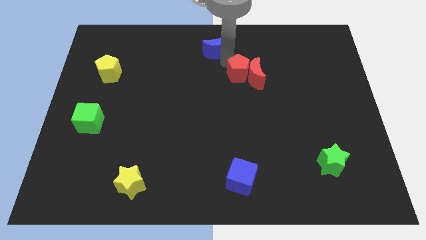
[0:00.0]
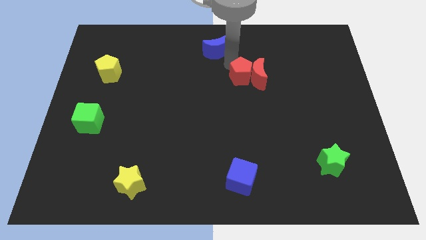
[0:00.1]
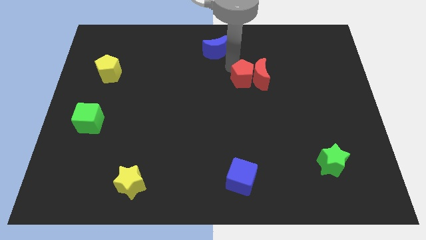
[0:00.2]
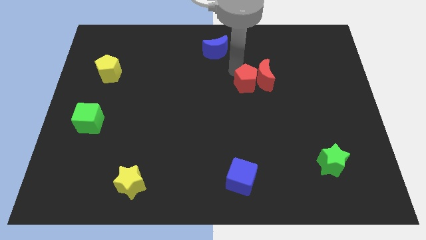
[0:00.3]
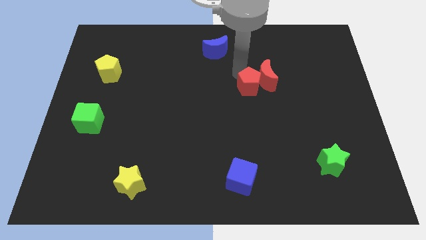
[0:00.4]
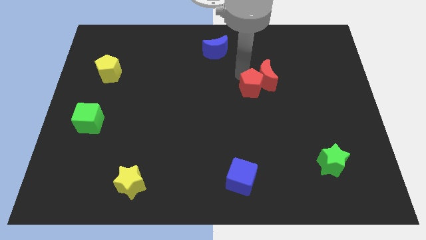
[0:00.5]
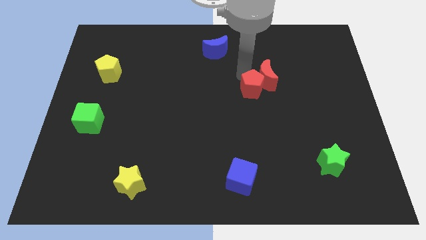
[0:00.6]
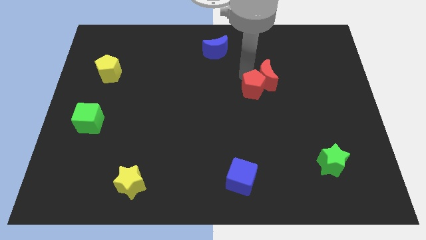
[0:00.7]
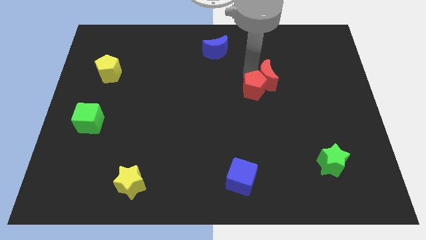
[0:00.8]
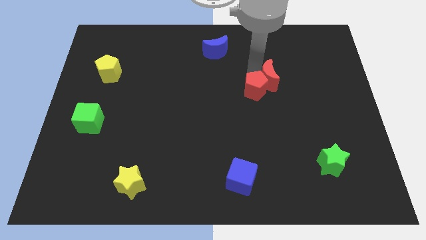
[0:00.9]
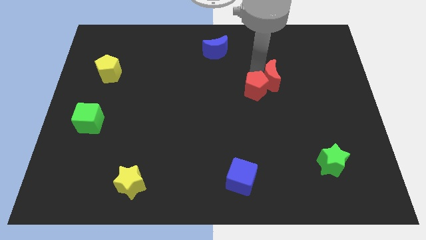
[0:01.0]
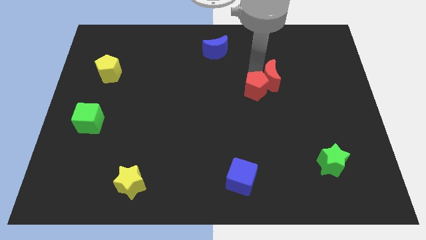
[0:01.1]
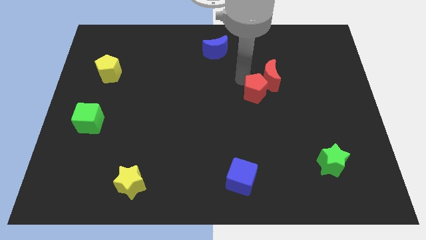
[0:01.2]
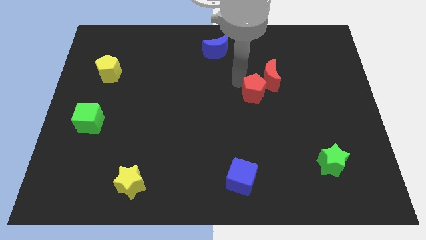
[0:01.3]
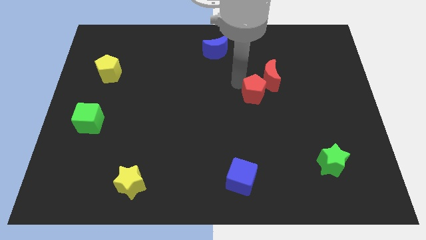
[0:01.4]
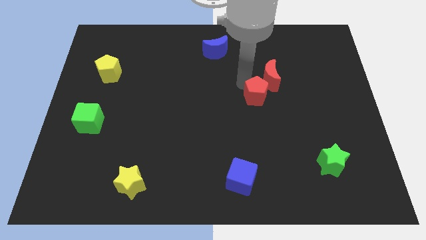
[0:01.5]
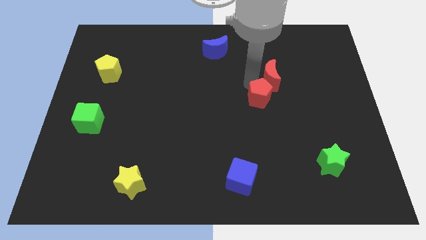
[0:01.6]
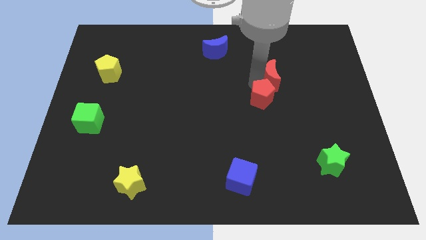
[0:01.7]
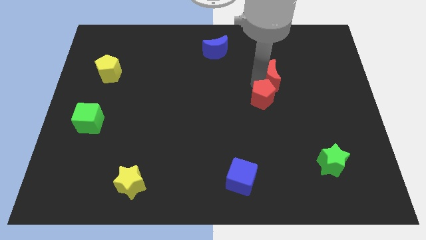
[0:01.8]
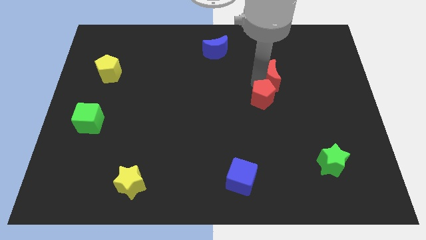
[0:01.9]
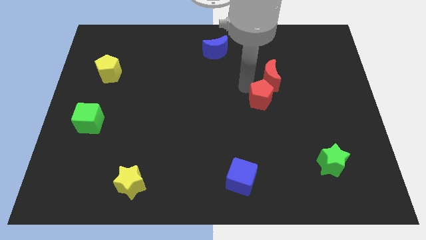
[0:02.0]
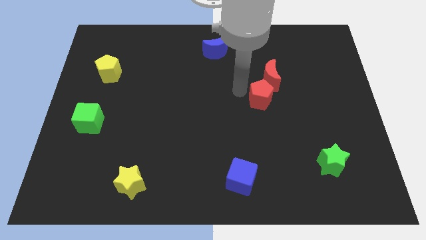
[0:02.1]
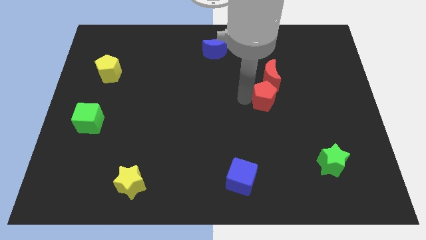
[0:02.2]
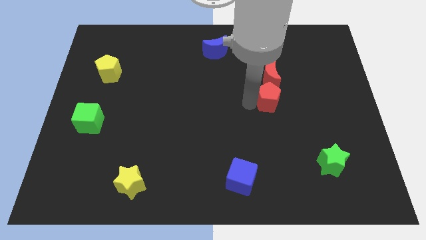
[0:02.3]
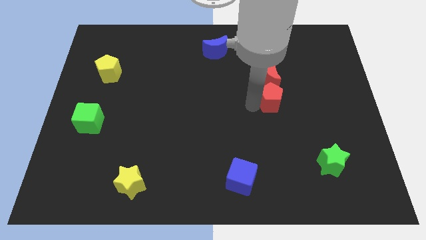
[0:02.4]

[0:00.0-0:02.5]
push the red pentagon to the bottom of the red crescent vertically

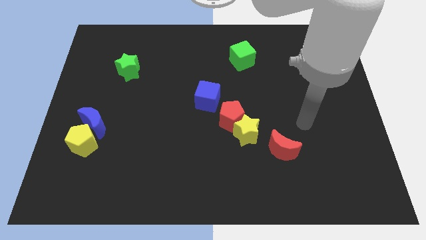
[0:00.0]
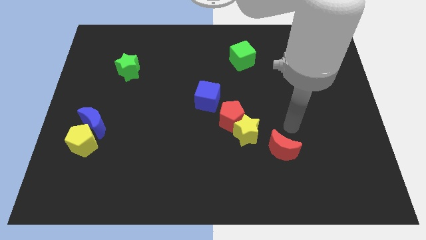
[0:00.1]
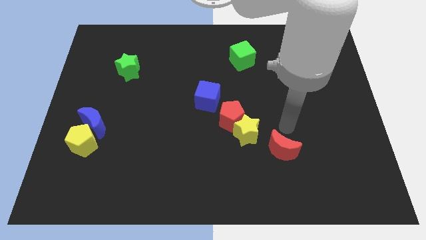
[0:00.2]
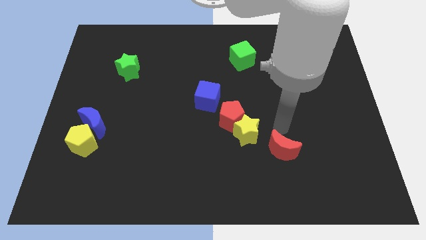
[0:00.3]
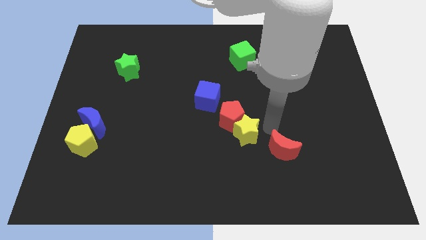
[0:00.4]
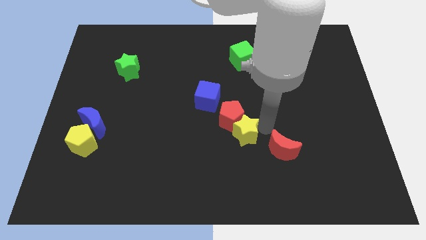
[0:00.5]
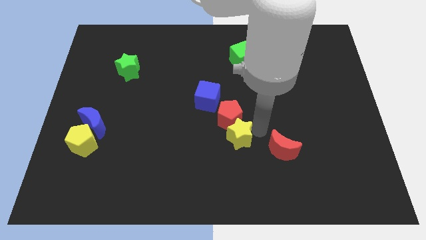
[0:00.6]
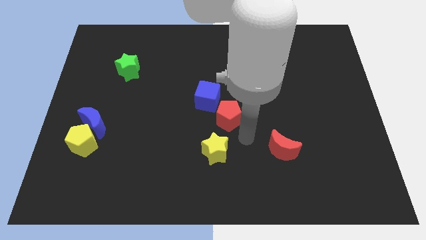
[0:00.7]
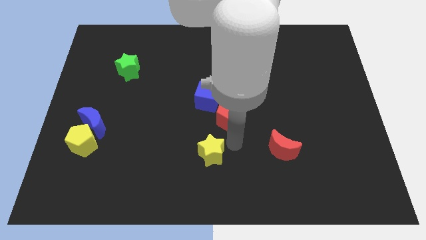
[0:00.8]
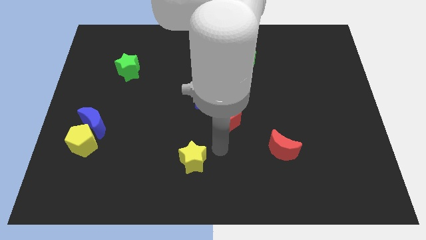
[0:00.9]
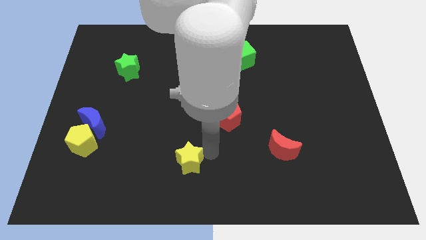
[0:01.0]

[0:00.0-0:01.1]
move the yellow star to the bottom of the board

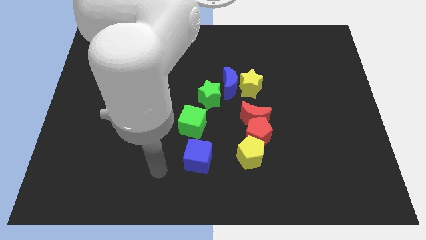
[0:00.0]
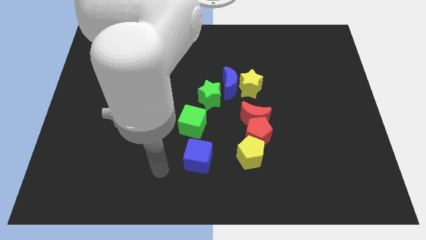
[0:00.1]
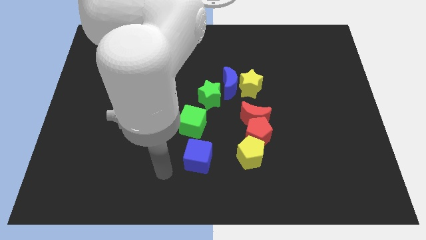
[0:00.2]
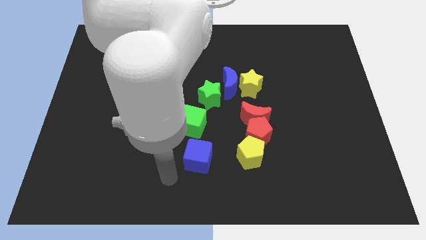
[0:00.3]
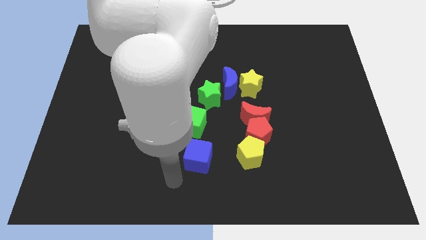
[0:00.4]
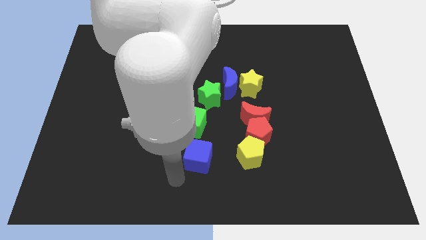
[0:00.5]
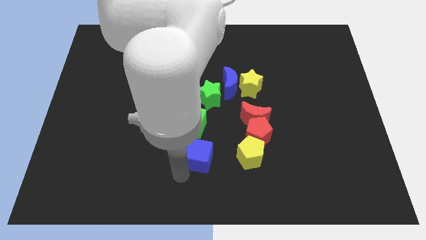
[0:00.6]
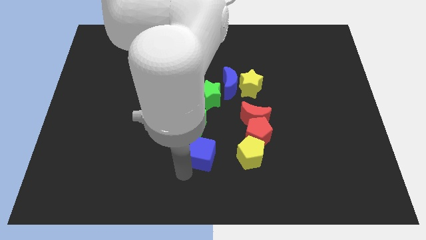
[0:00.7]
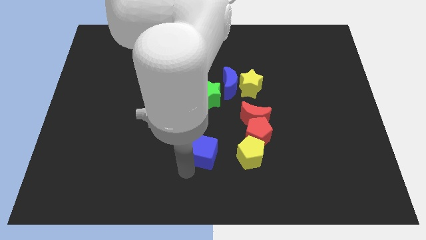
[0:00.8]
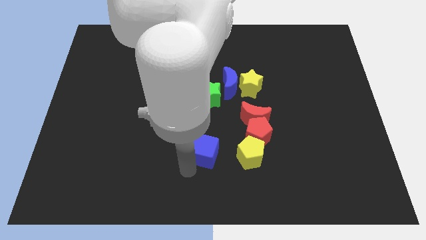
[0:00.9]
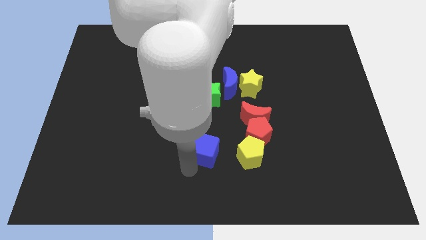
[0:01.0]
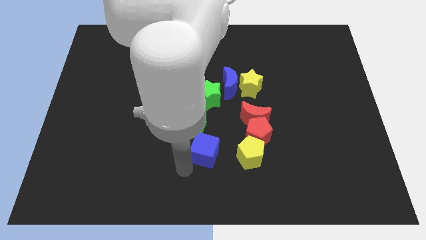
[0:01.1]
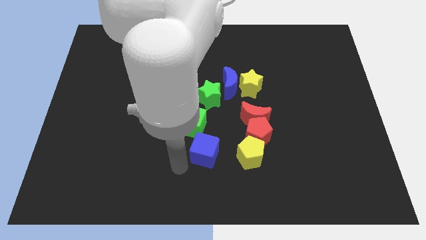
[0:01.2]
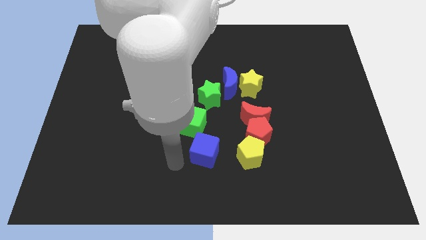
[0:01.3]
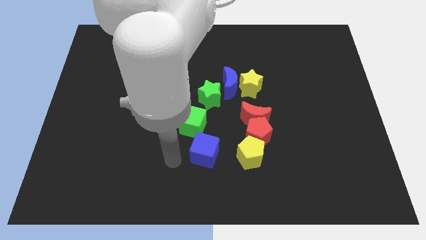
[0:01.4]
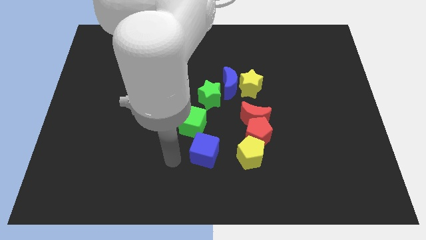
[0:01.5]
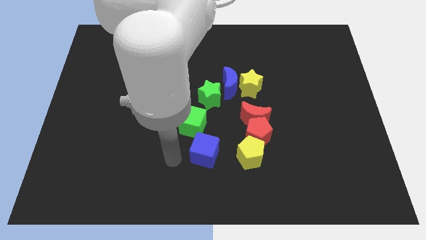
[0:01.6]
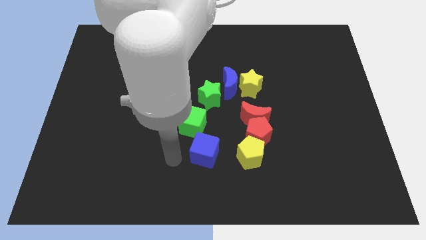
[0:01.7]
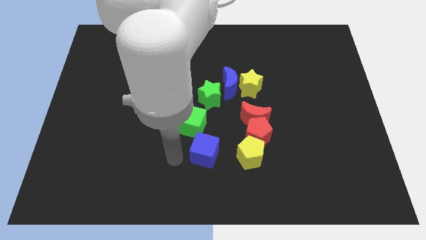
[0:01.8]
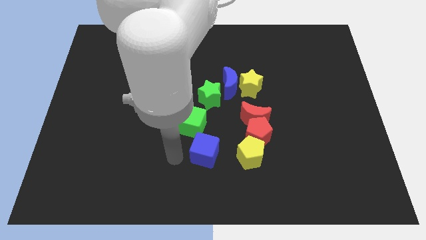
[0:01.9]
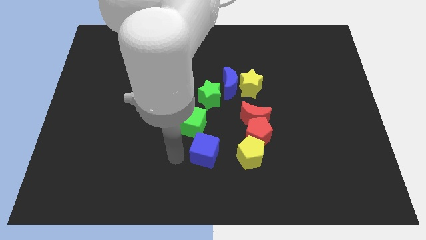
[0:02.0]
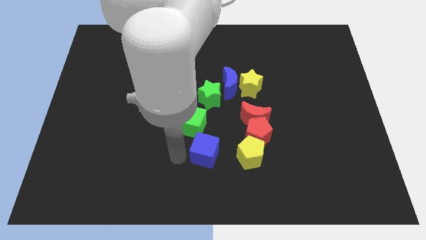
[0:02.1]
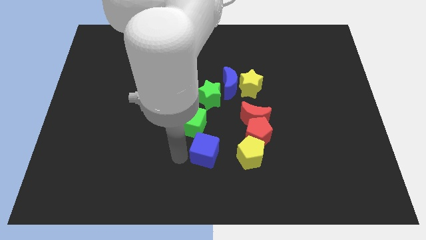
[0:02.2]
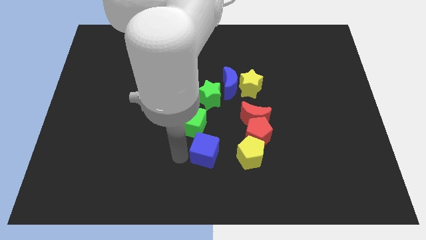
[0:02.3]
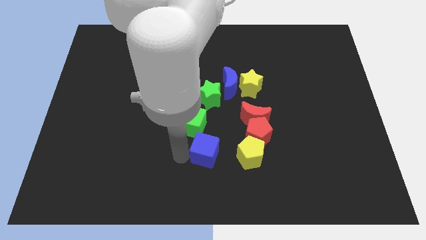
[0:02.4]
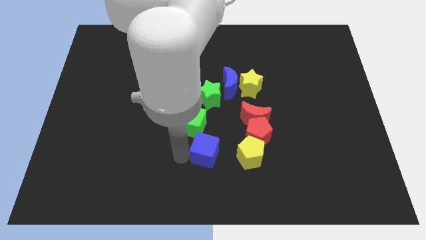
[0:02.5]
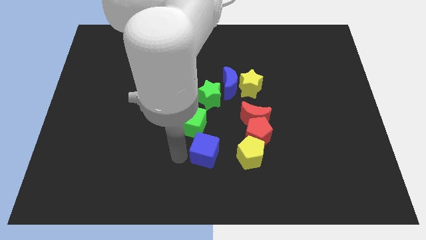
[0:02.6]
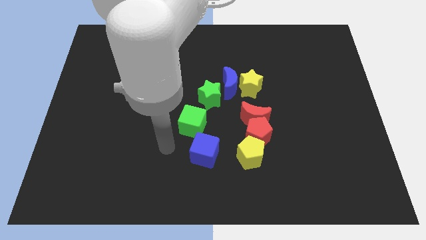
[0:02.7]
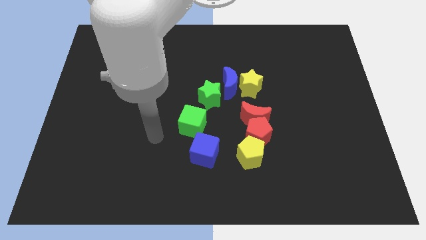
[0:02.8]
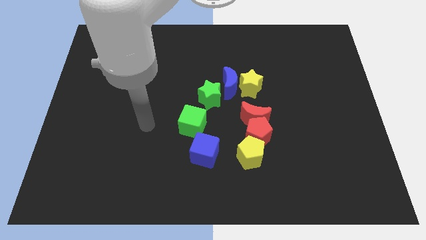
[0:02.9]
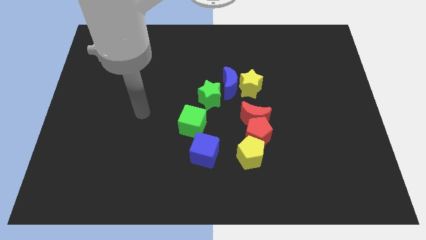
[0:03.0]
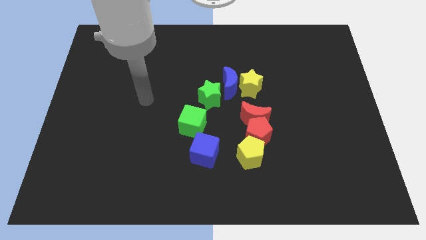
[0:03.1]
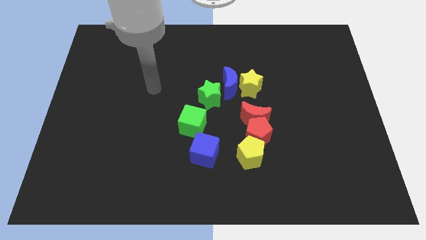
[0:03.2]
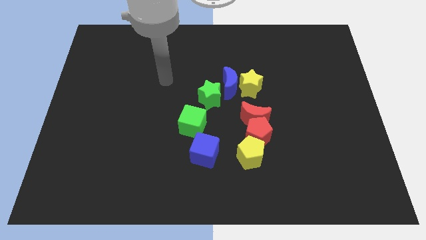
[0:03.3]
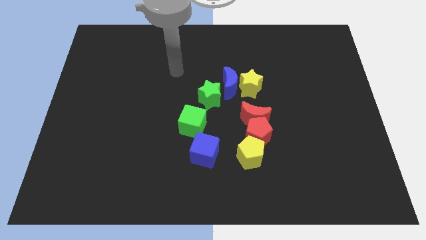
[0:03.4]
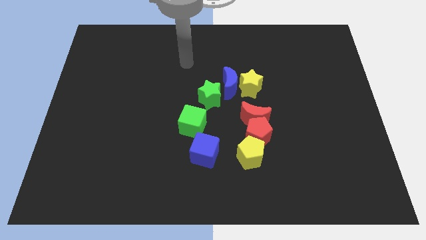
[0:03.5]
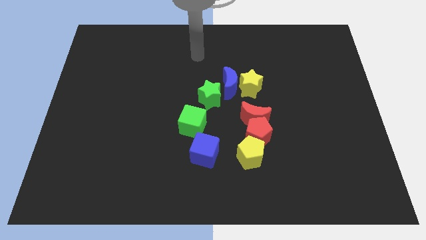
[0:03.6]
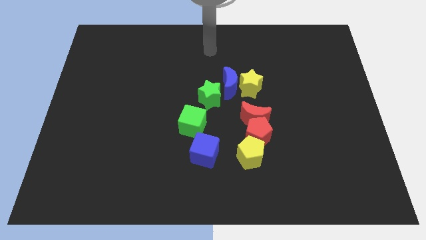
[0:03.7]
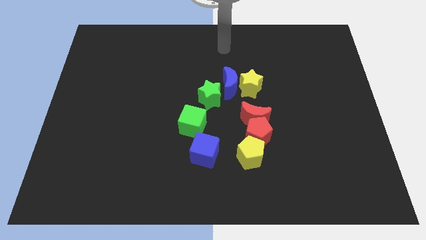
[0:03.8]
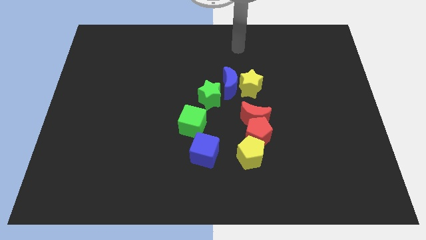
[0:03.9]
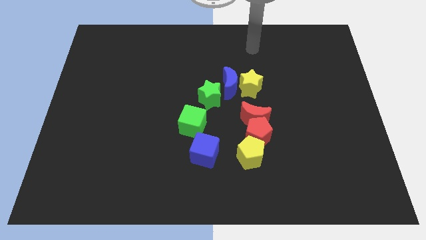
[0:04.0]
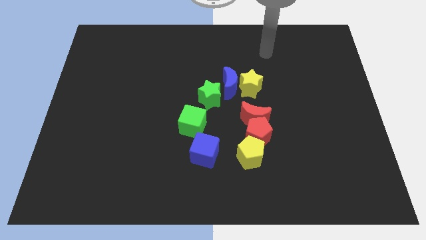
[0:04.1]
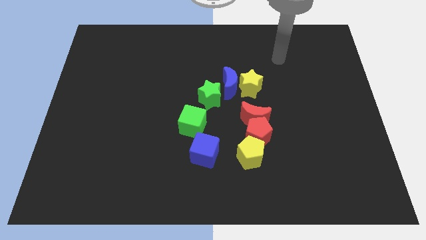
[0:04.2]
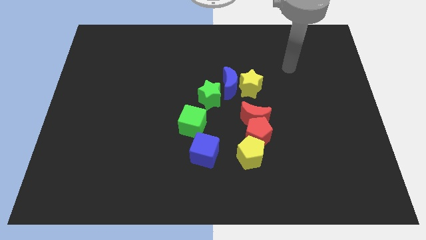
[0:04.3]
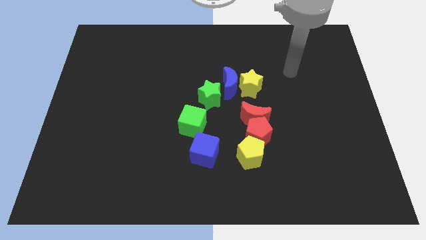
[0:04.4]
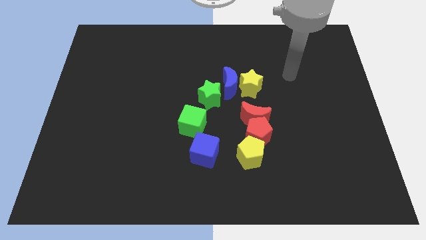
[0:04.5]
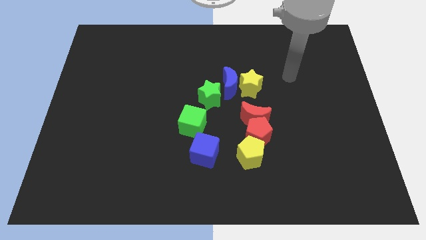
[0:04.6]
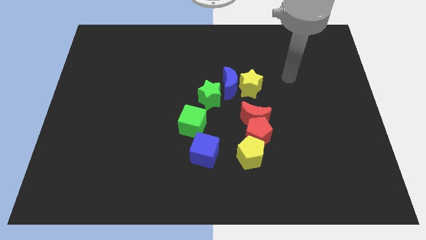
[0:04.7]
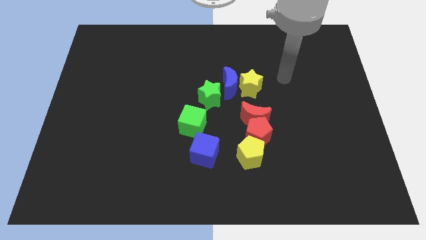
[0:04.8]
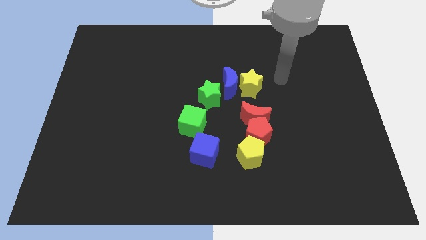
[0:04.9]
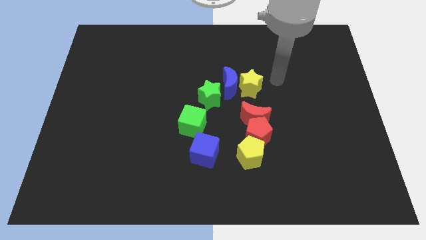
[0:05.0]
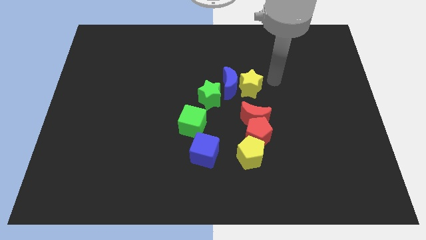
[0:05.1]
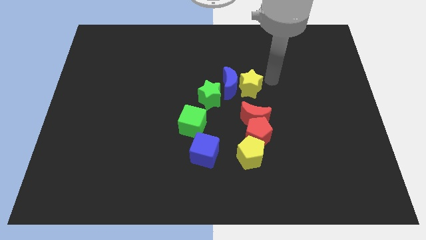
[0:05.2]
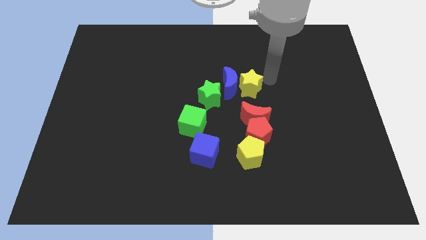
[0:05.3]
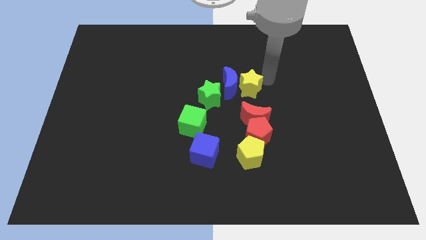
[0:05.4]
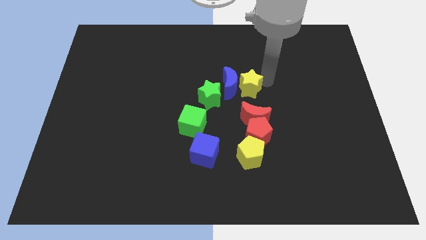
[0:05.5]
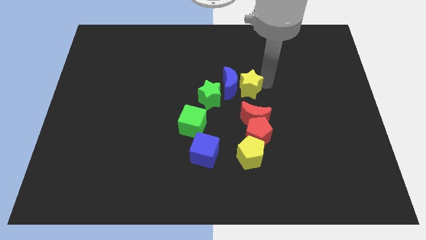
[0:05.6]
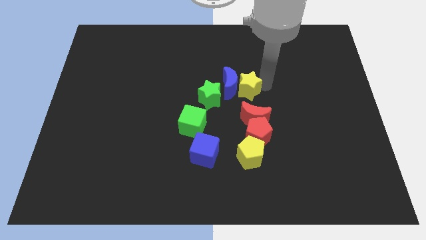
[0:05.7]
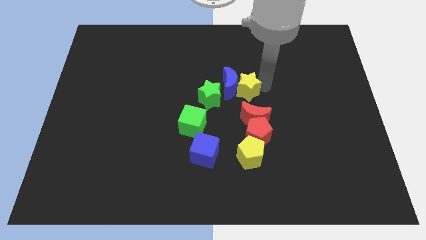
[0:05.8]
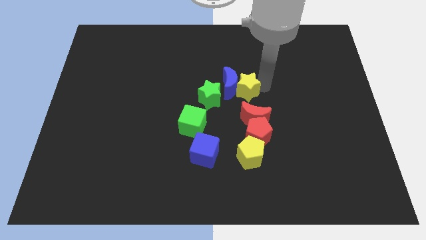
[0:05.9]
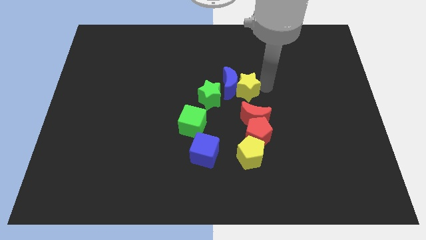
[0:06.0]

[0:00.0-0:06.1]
push the blue cube and yellow star
